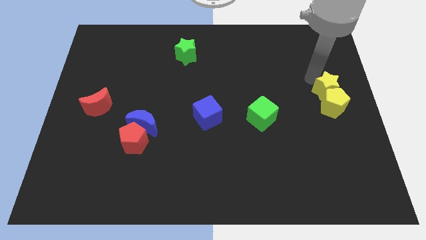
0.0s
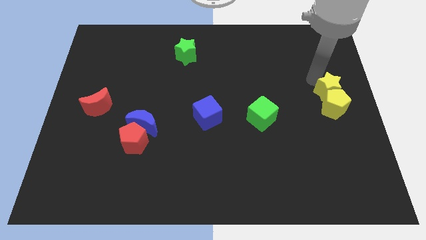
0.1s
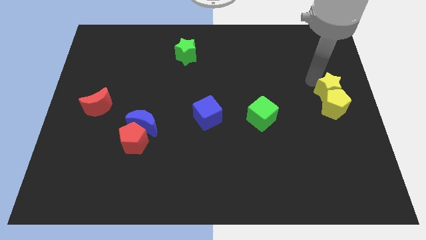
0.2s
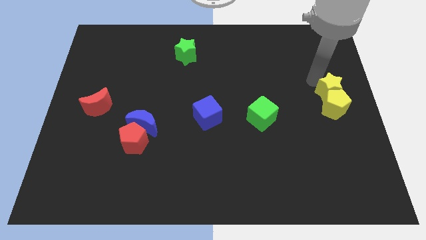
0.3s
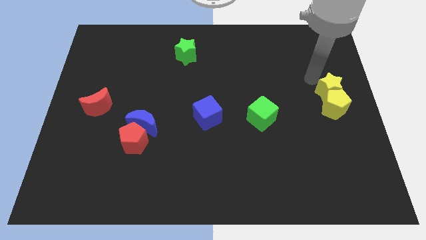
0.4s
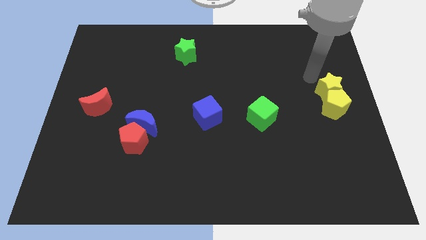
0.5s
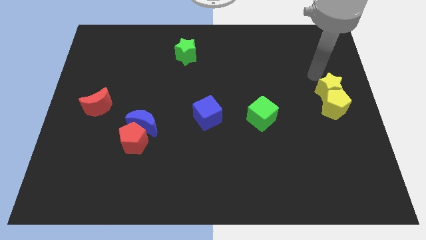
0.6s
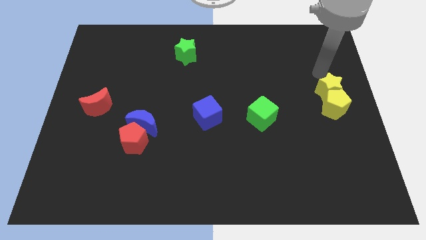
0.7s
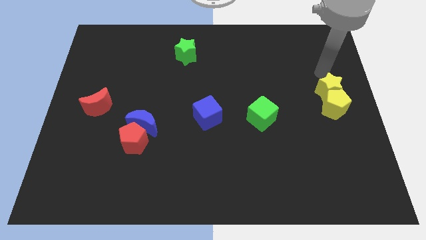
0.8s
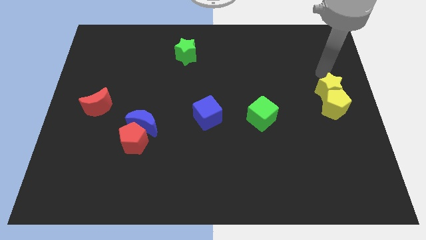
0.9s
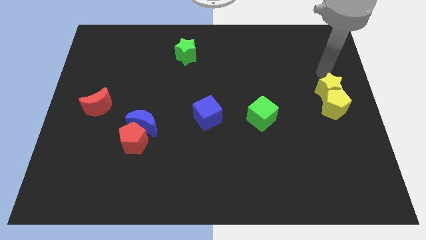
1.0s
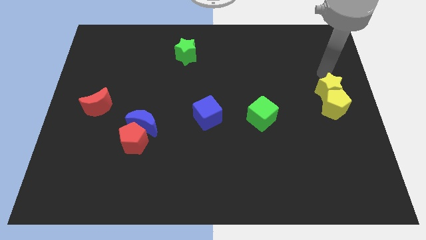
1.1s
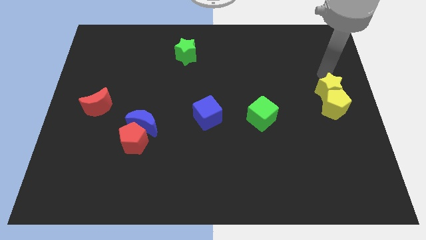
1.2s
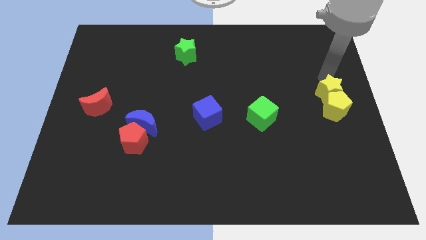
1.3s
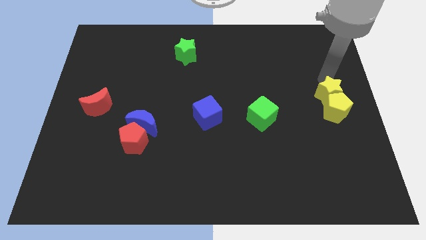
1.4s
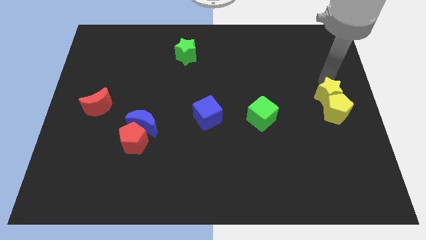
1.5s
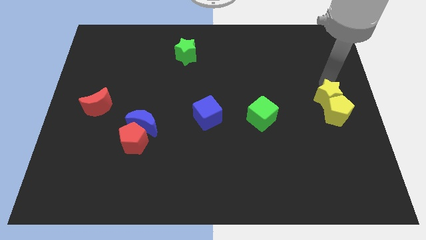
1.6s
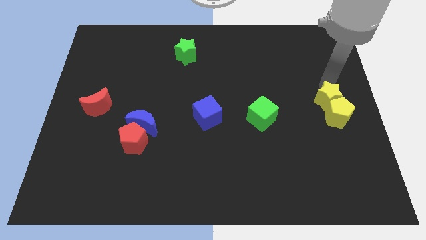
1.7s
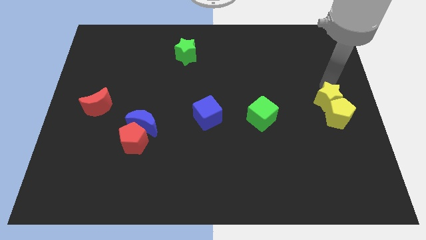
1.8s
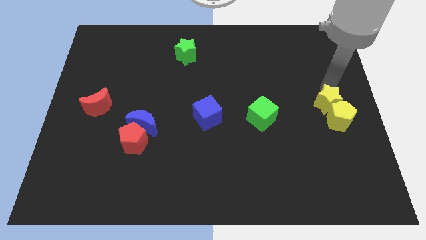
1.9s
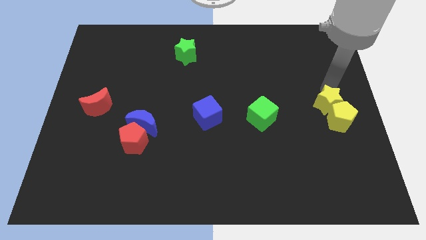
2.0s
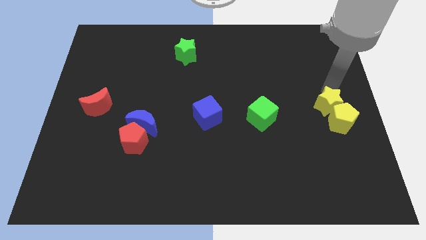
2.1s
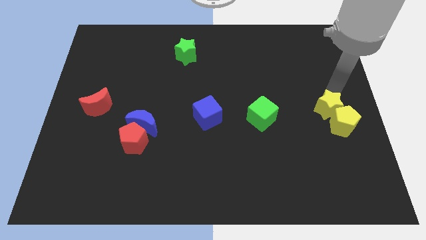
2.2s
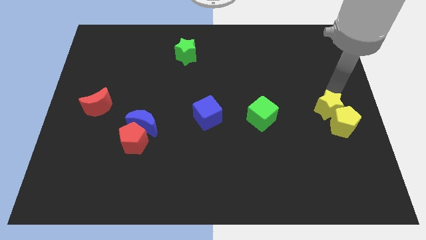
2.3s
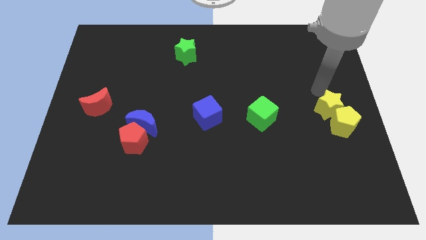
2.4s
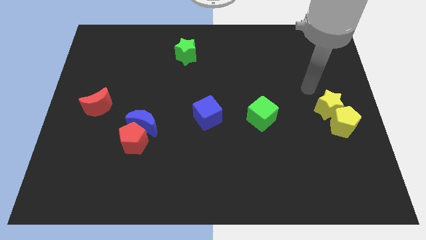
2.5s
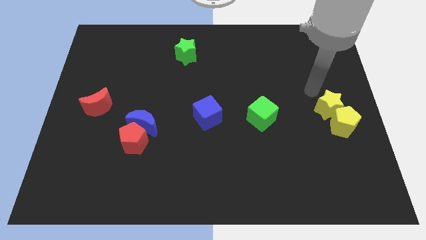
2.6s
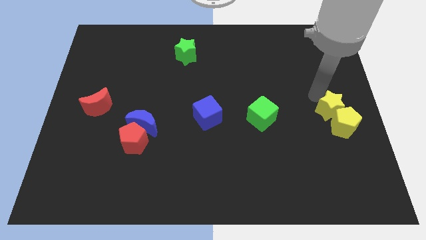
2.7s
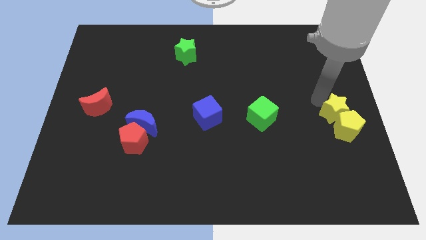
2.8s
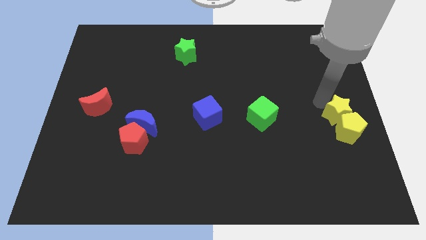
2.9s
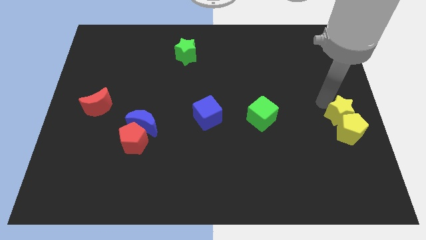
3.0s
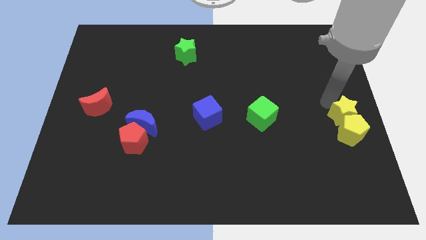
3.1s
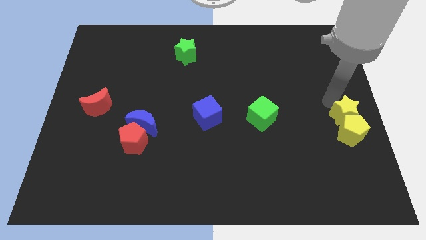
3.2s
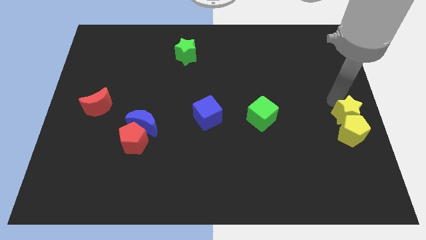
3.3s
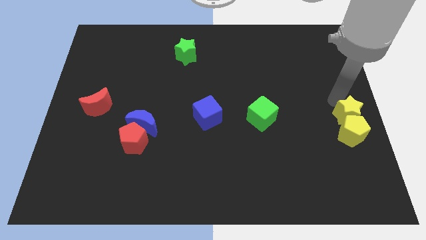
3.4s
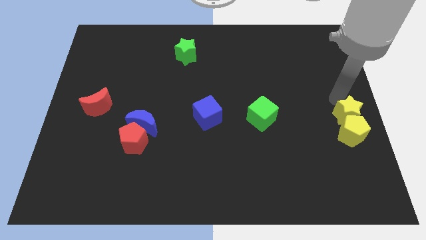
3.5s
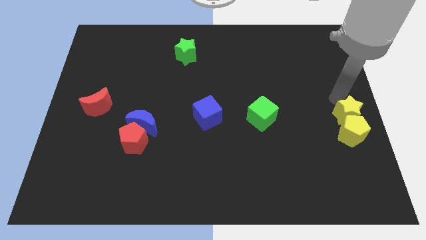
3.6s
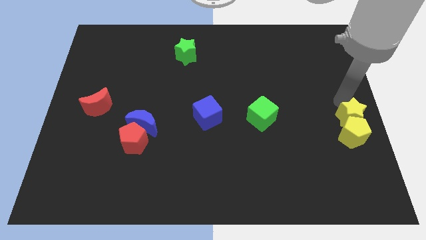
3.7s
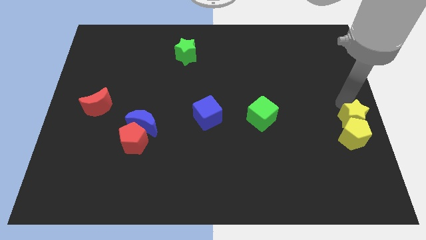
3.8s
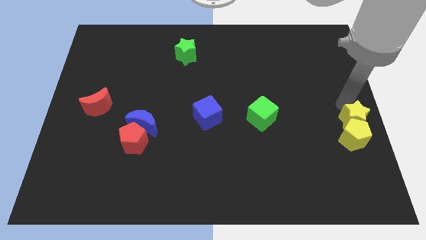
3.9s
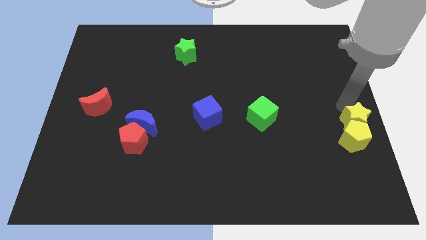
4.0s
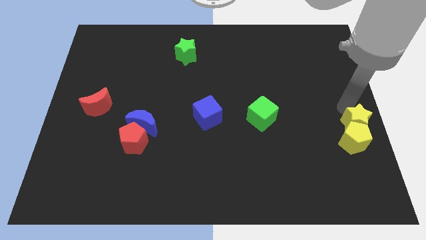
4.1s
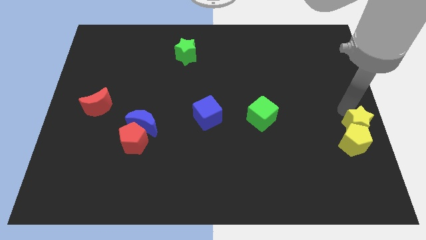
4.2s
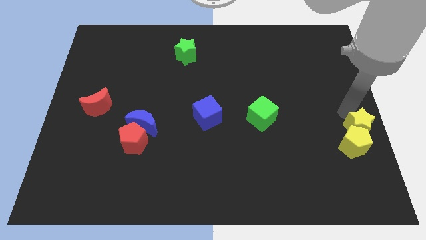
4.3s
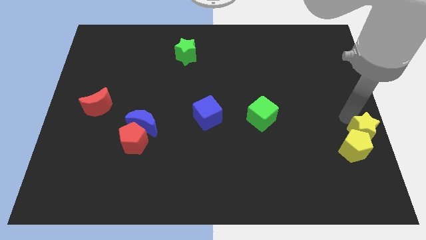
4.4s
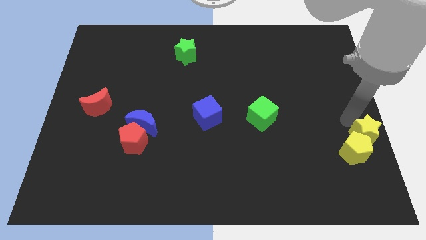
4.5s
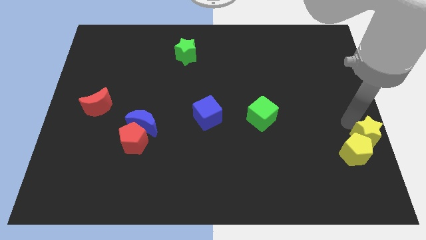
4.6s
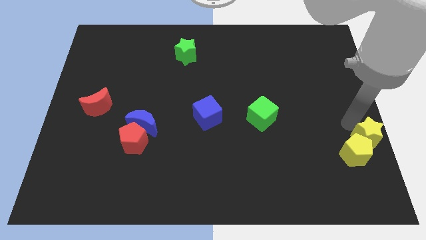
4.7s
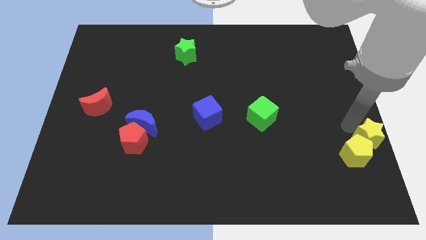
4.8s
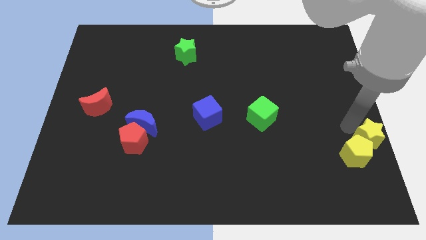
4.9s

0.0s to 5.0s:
push the yellow blocks towards the bottom

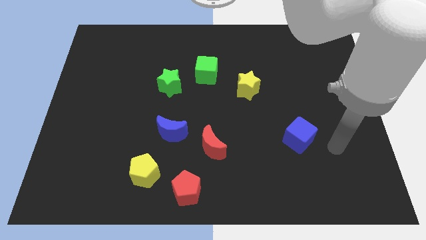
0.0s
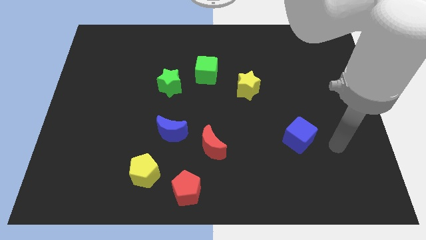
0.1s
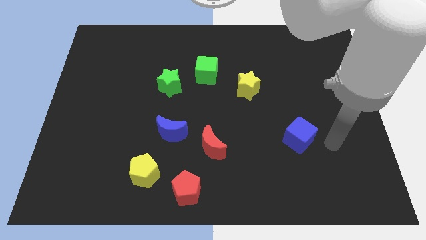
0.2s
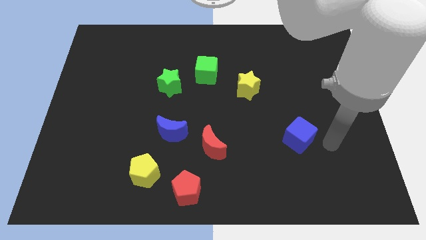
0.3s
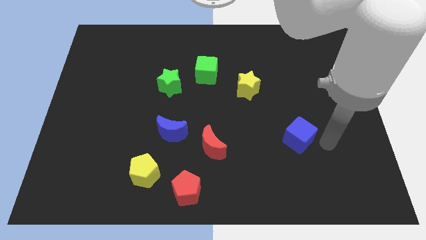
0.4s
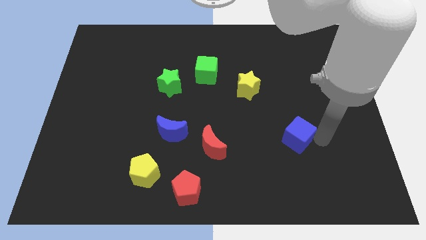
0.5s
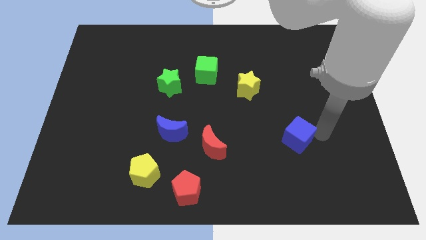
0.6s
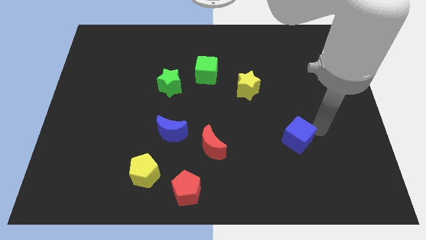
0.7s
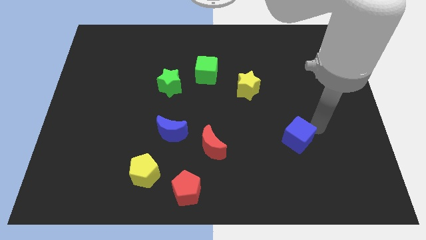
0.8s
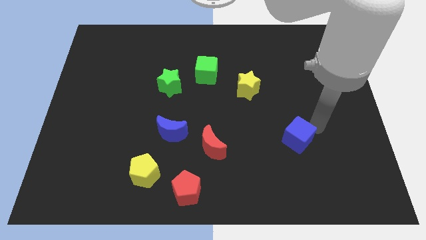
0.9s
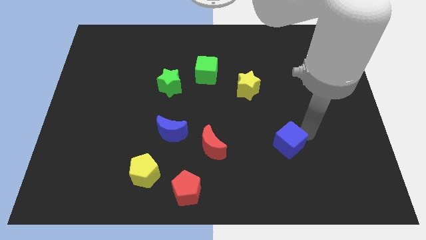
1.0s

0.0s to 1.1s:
move the blue cube to the right of the red crescent

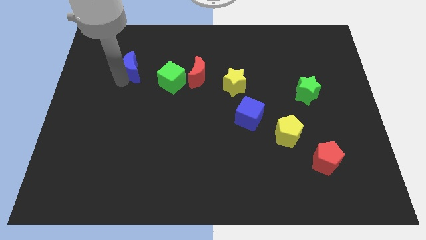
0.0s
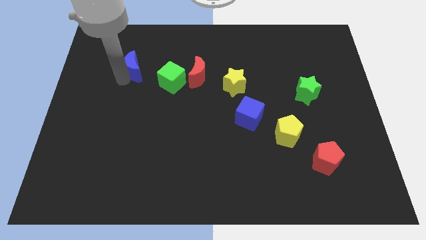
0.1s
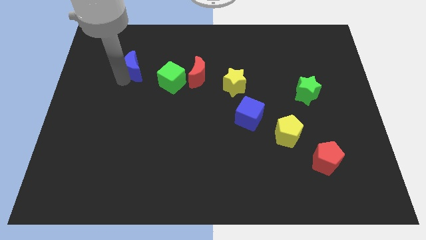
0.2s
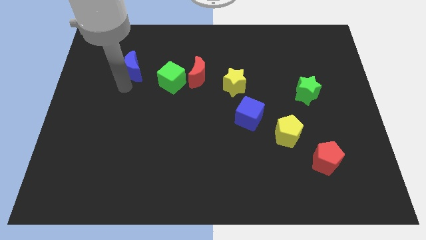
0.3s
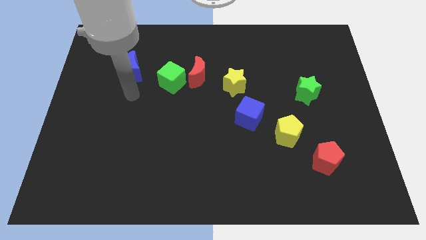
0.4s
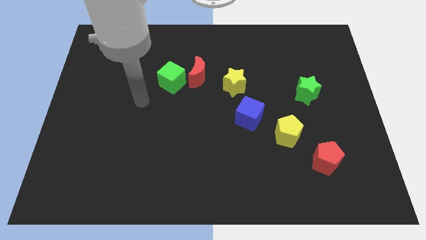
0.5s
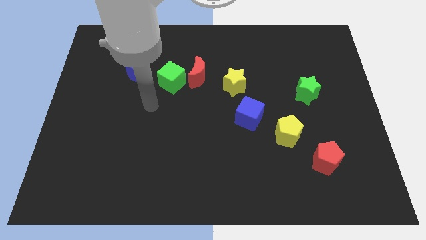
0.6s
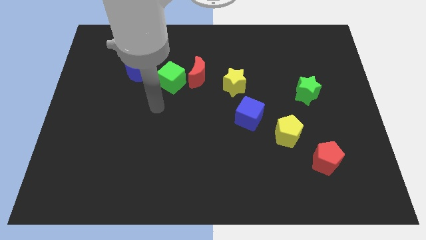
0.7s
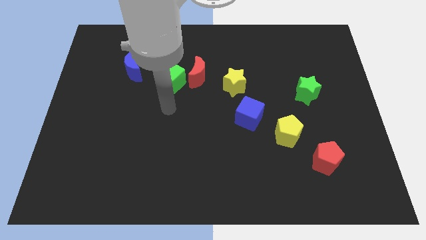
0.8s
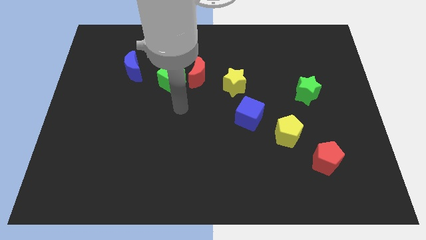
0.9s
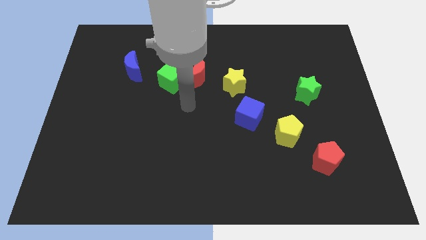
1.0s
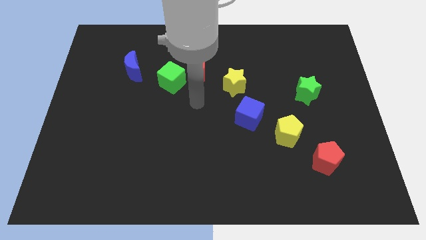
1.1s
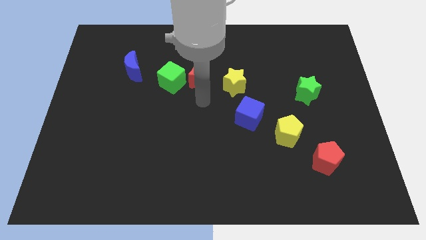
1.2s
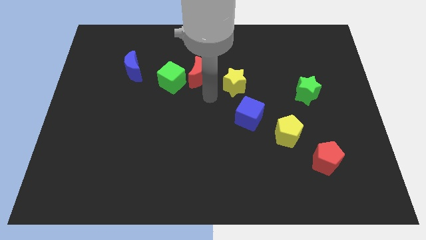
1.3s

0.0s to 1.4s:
move the arm below the red crescent

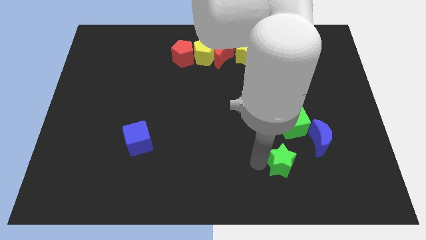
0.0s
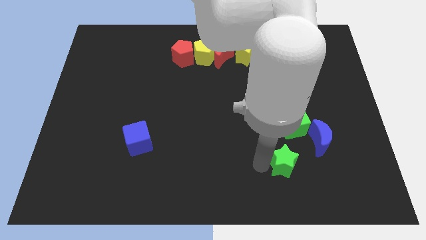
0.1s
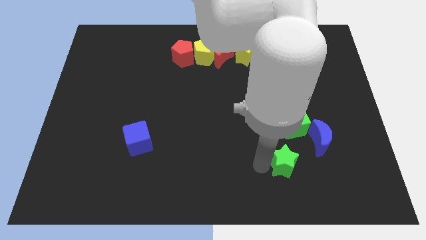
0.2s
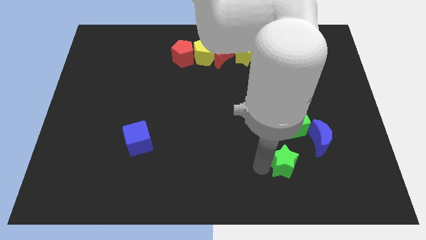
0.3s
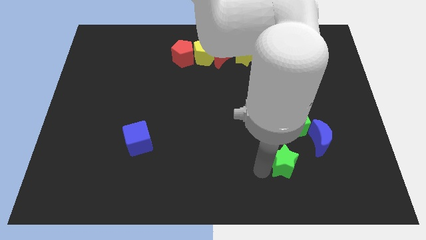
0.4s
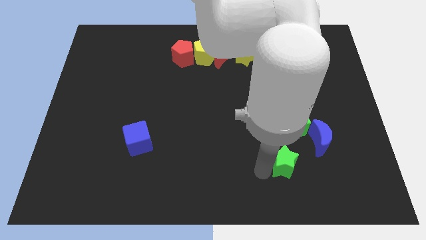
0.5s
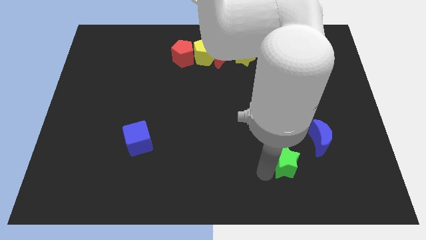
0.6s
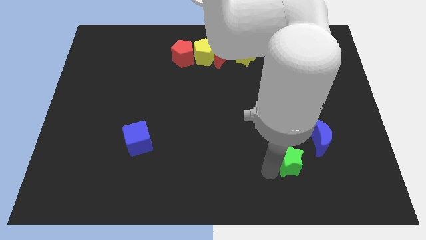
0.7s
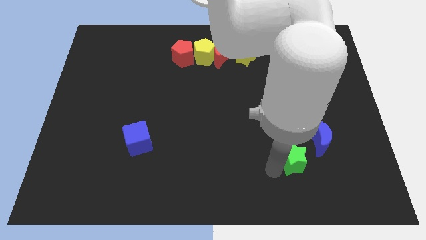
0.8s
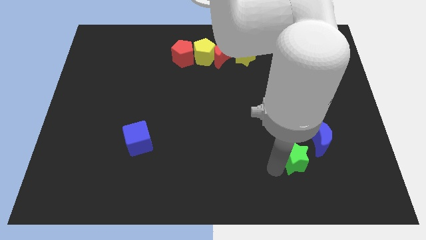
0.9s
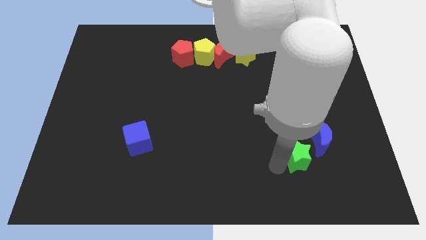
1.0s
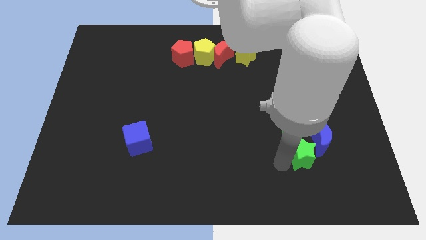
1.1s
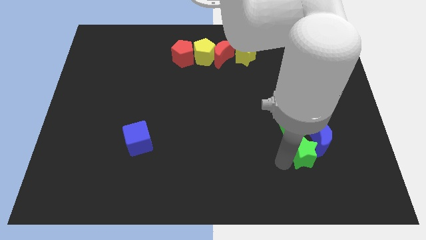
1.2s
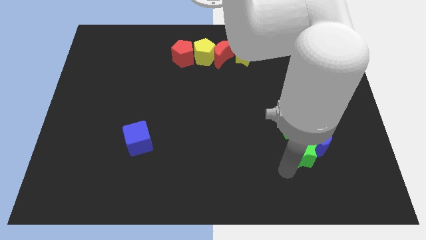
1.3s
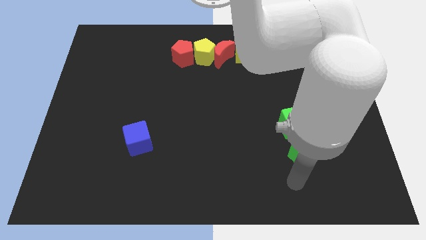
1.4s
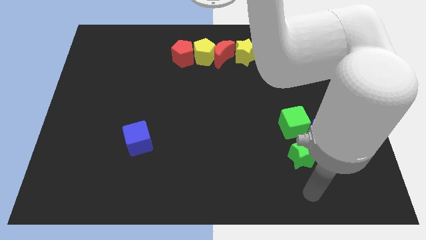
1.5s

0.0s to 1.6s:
push green star below green cube
